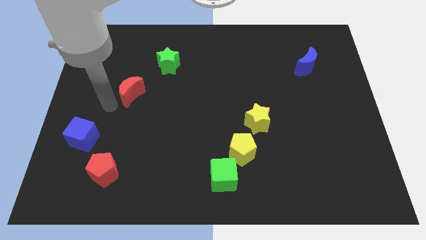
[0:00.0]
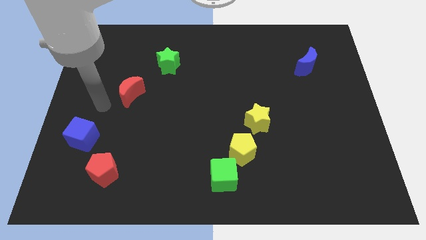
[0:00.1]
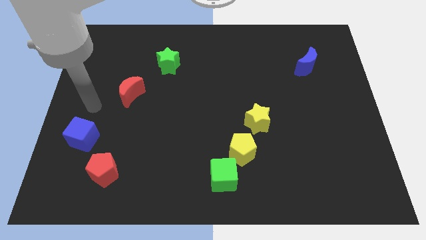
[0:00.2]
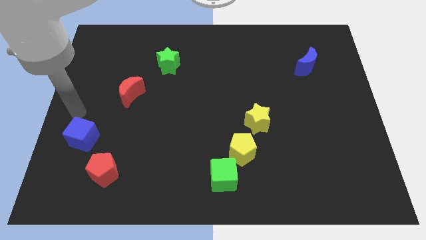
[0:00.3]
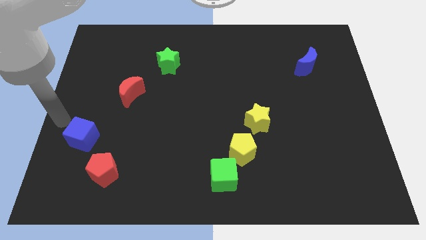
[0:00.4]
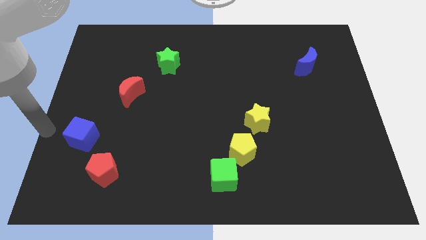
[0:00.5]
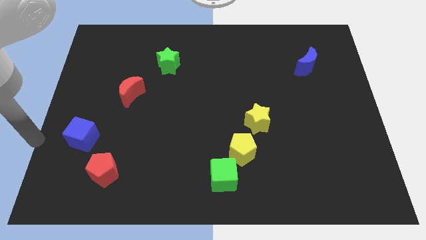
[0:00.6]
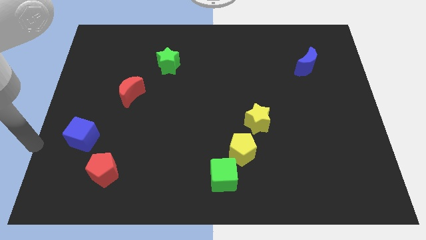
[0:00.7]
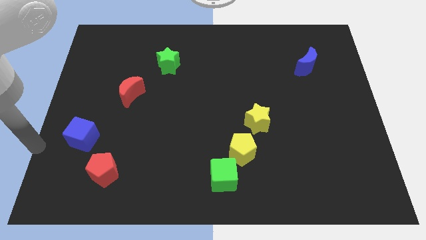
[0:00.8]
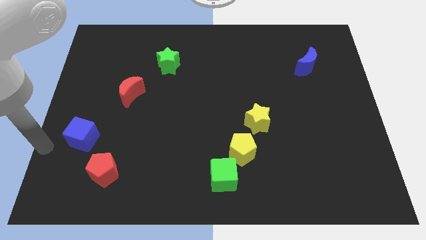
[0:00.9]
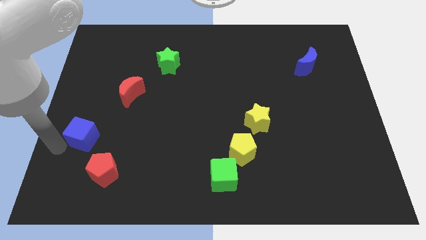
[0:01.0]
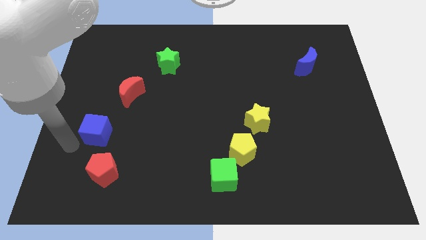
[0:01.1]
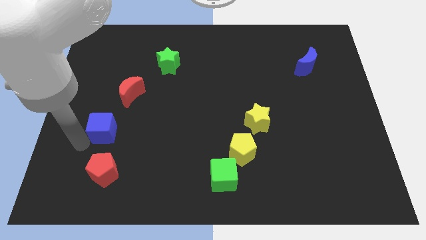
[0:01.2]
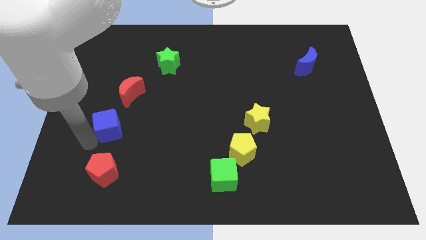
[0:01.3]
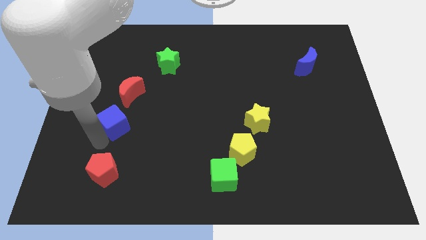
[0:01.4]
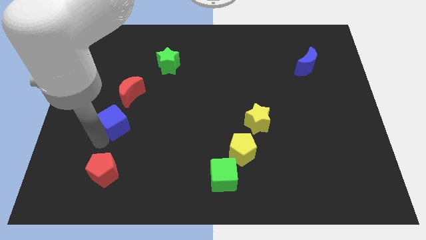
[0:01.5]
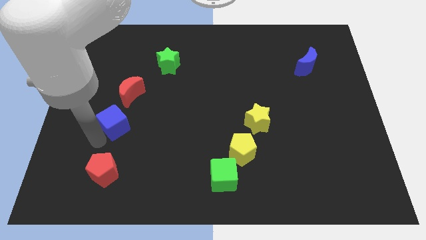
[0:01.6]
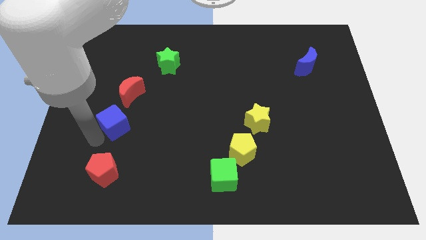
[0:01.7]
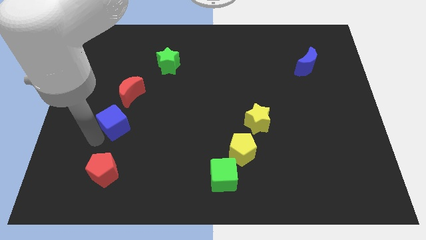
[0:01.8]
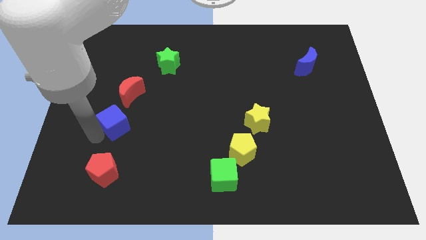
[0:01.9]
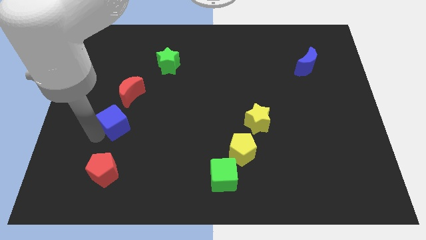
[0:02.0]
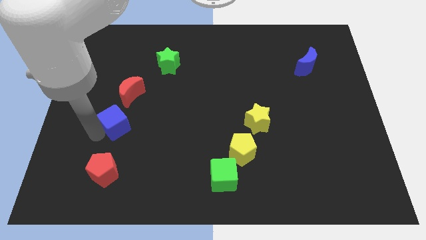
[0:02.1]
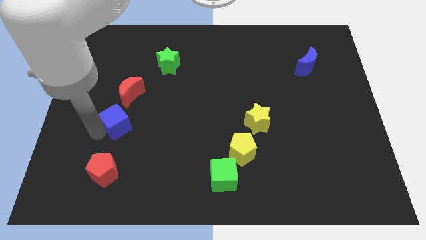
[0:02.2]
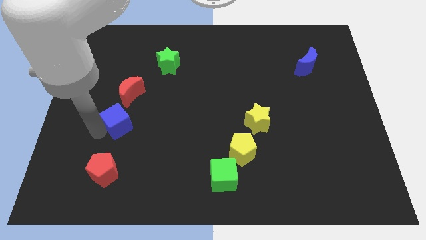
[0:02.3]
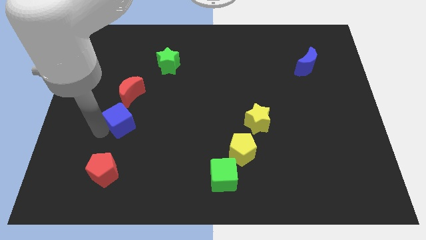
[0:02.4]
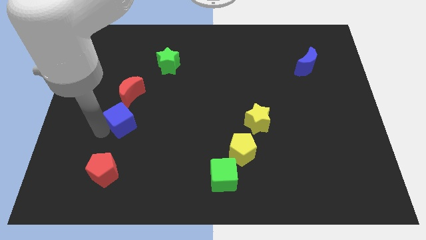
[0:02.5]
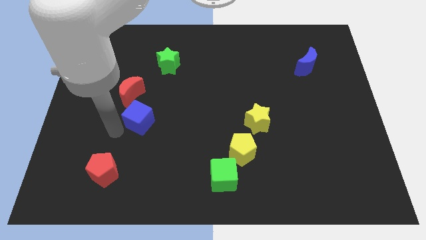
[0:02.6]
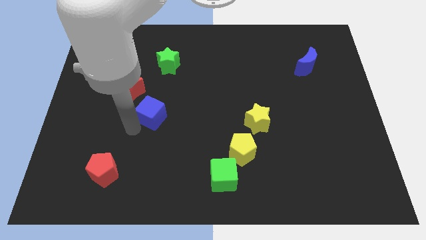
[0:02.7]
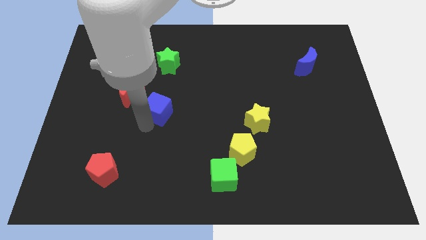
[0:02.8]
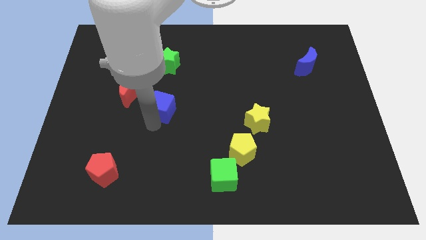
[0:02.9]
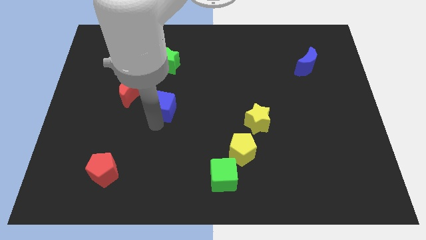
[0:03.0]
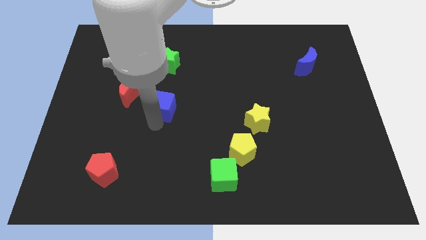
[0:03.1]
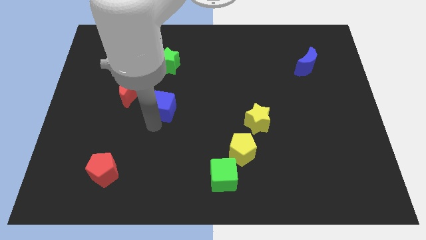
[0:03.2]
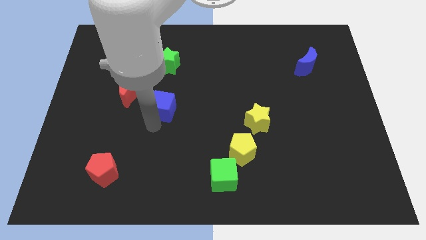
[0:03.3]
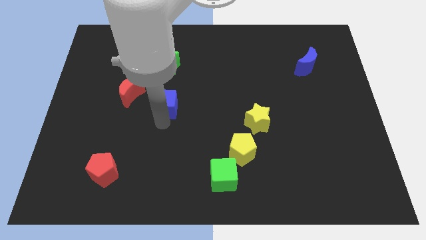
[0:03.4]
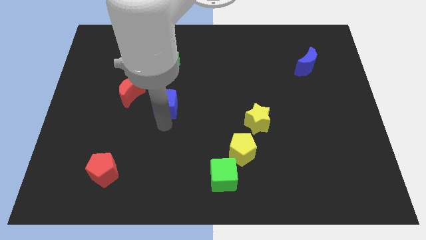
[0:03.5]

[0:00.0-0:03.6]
move the blue cube vertically below the green star

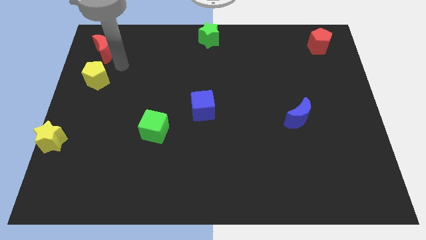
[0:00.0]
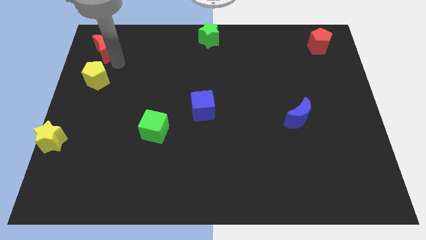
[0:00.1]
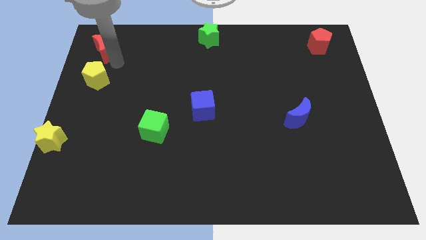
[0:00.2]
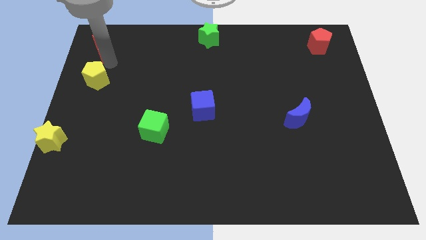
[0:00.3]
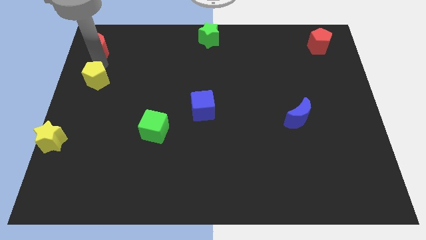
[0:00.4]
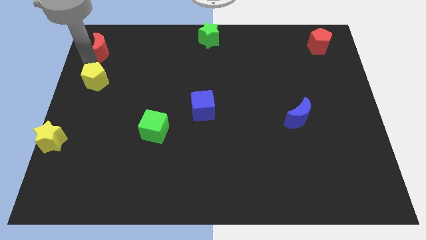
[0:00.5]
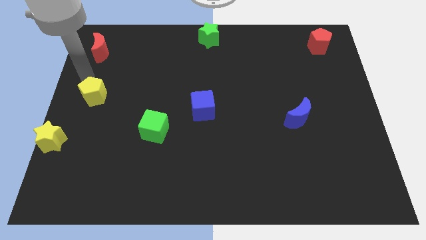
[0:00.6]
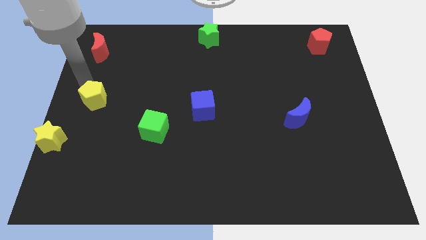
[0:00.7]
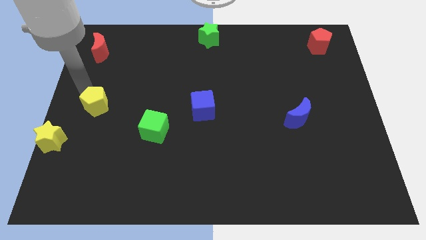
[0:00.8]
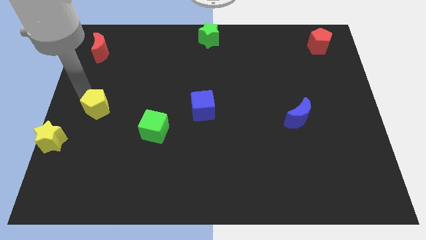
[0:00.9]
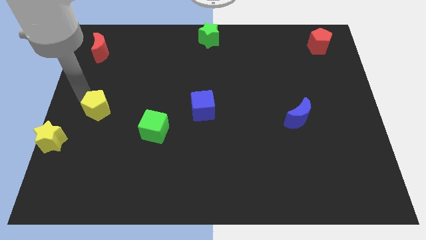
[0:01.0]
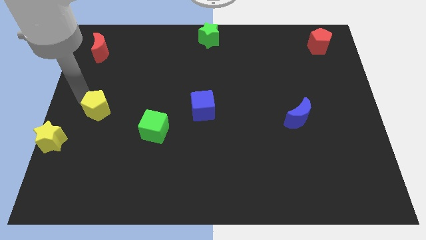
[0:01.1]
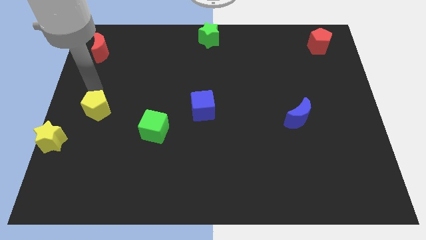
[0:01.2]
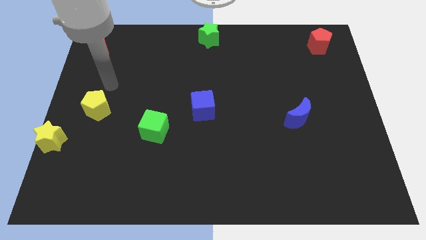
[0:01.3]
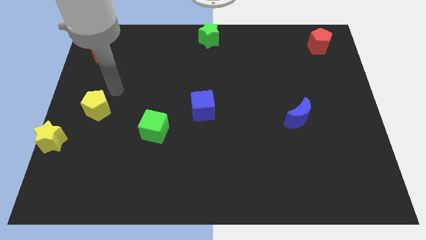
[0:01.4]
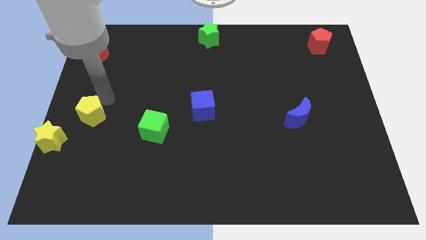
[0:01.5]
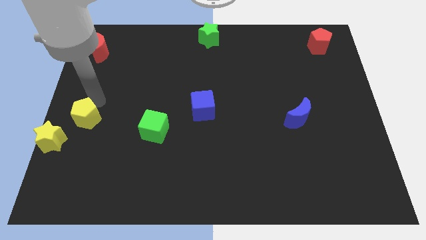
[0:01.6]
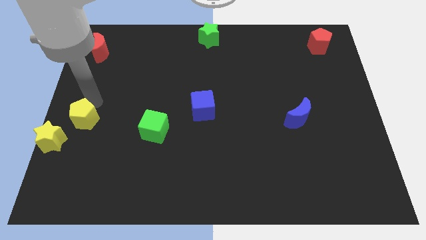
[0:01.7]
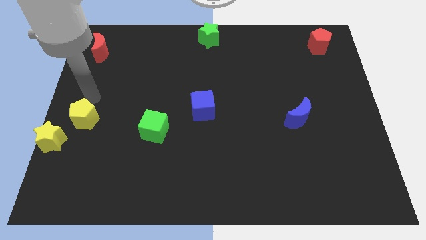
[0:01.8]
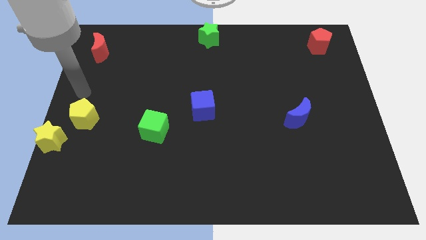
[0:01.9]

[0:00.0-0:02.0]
push the yellow pentagon slightly to the bottom

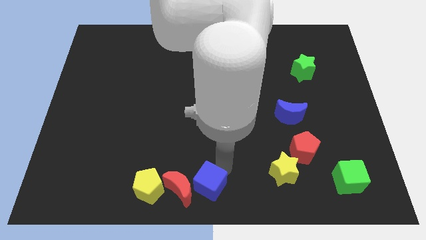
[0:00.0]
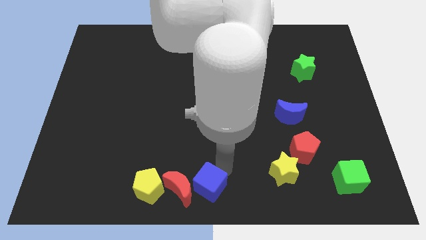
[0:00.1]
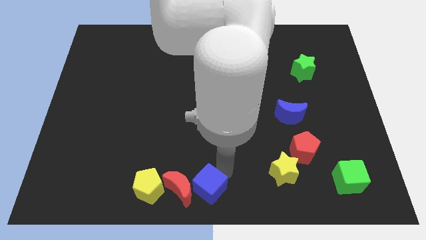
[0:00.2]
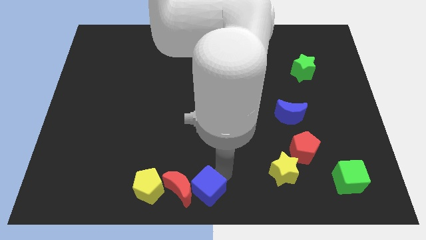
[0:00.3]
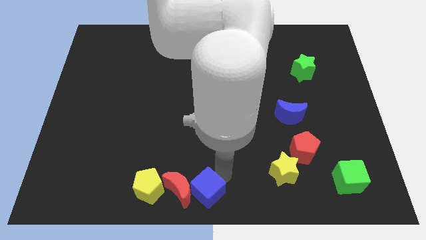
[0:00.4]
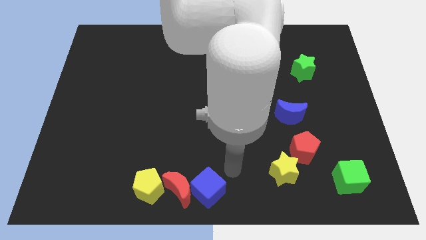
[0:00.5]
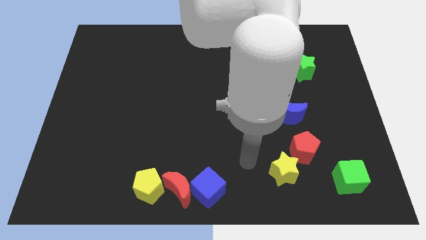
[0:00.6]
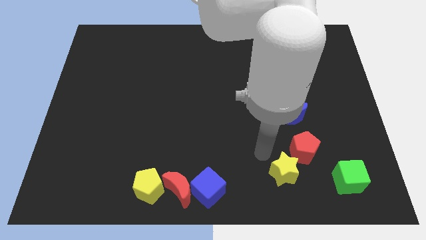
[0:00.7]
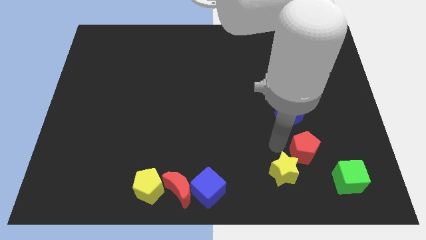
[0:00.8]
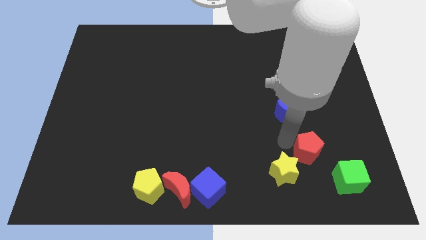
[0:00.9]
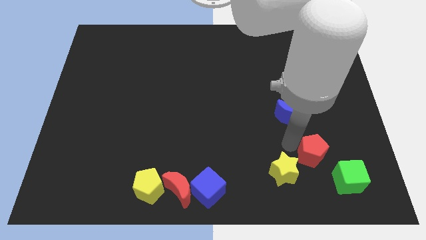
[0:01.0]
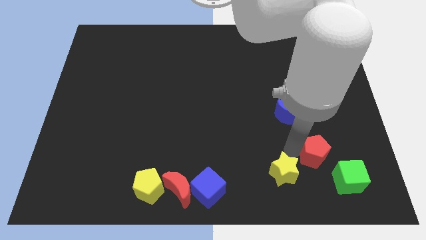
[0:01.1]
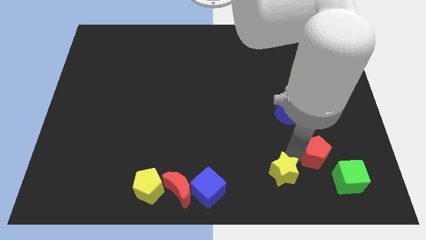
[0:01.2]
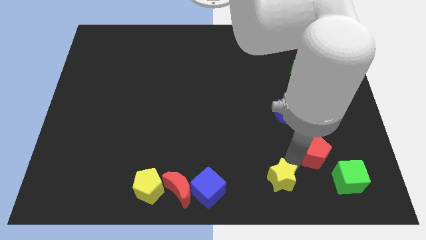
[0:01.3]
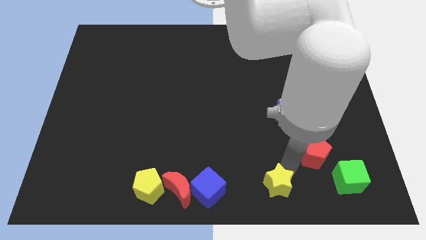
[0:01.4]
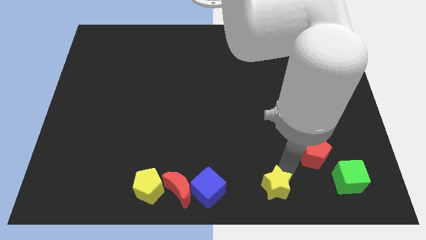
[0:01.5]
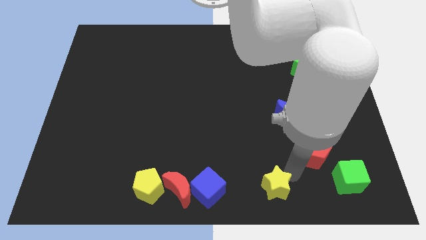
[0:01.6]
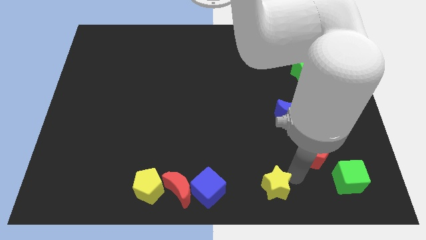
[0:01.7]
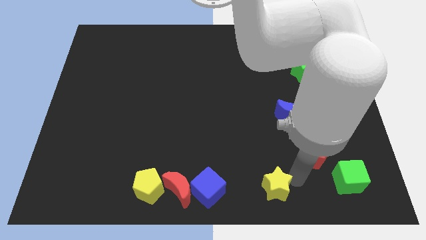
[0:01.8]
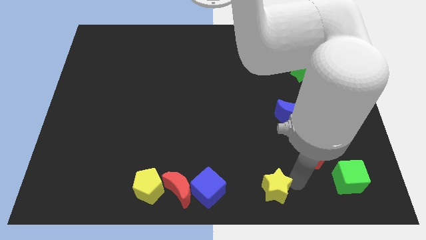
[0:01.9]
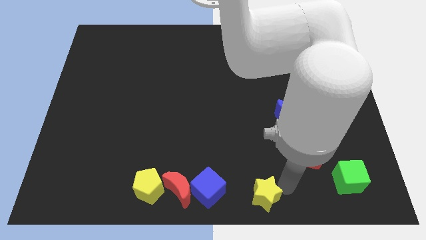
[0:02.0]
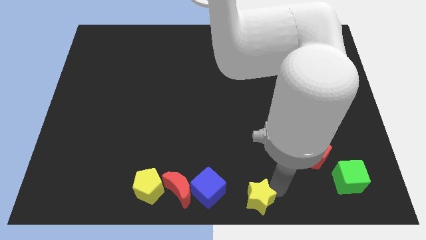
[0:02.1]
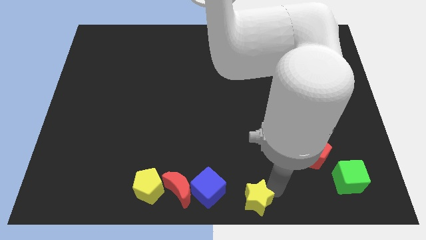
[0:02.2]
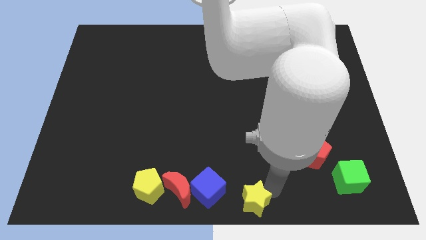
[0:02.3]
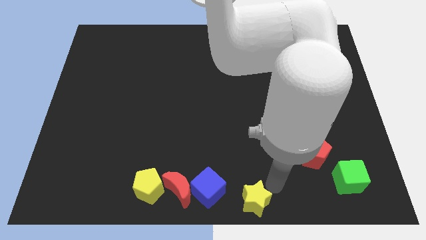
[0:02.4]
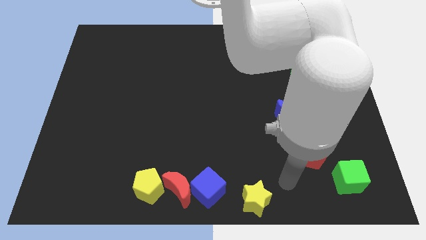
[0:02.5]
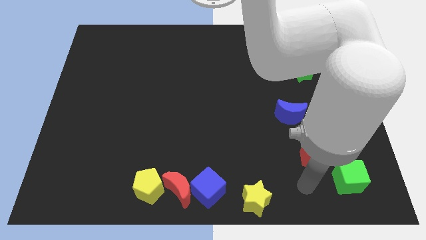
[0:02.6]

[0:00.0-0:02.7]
separate yellow star and red pentagon

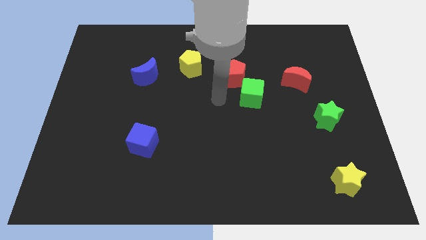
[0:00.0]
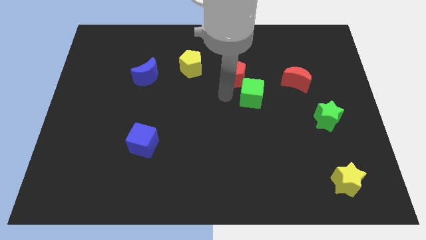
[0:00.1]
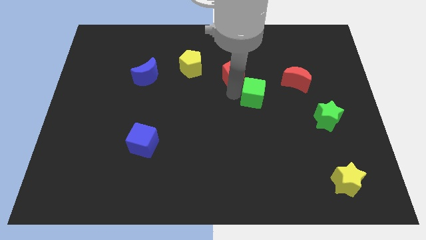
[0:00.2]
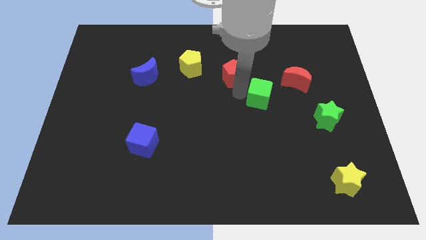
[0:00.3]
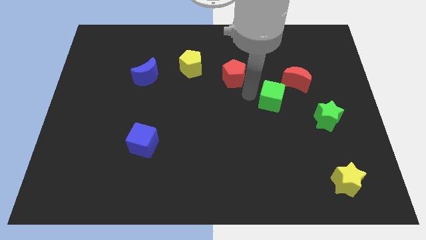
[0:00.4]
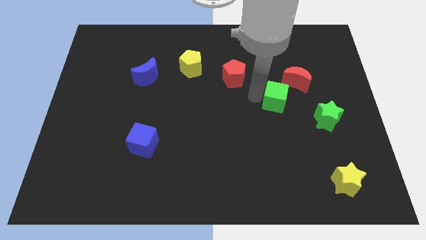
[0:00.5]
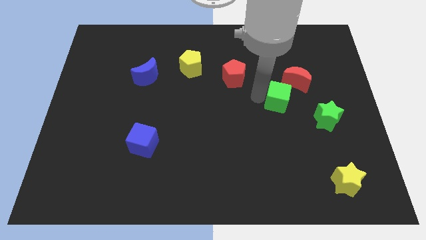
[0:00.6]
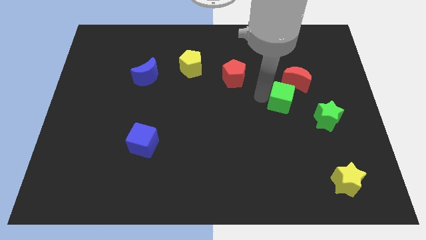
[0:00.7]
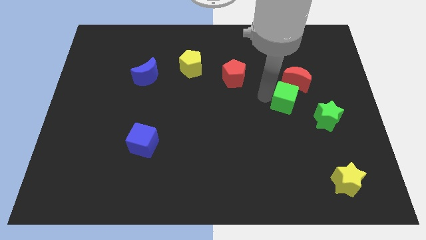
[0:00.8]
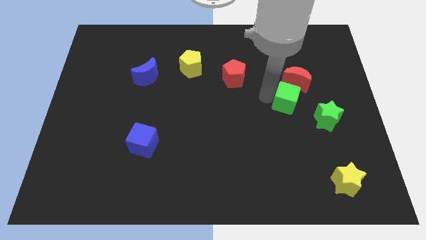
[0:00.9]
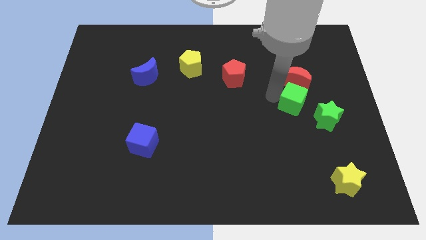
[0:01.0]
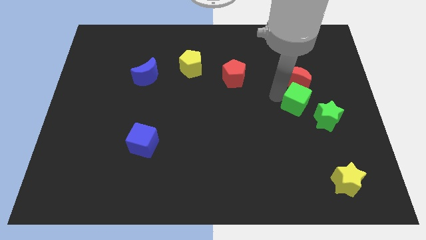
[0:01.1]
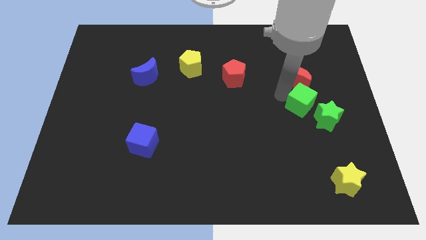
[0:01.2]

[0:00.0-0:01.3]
push the green cube to the bottom of the red crescent
